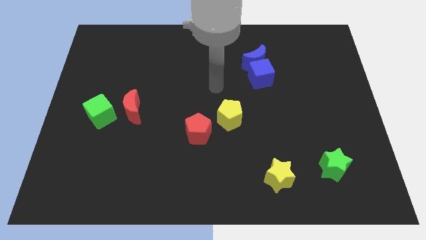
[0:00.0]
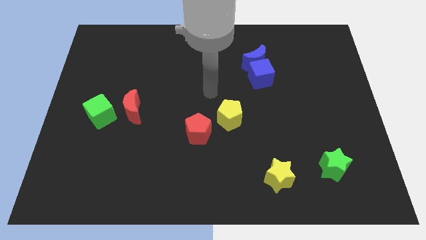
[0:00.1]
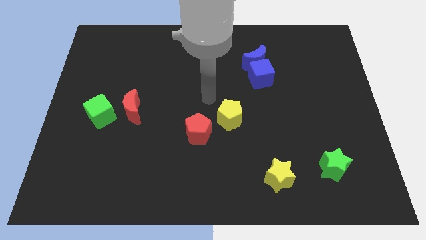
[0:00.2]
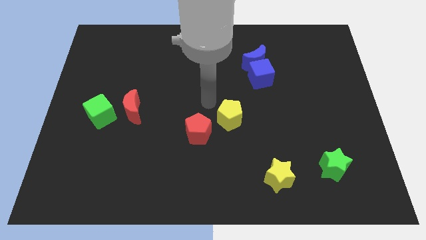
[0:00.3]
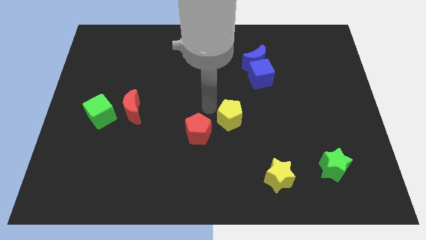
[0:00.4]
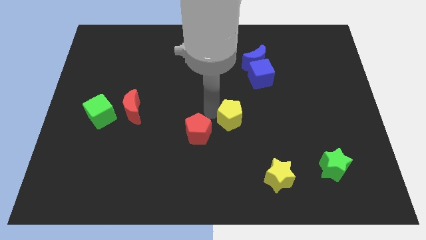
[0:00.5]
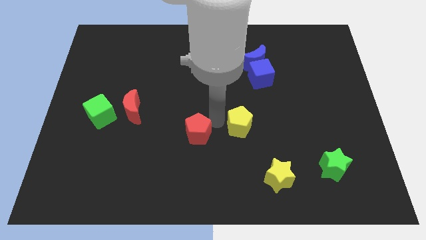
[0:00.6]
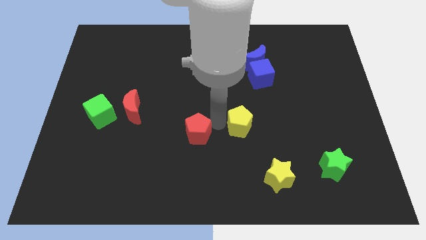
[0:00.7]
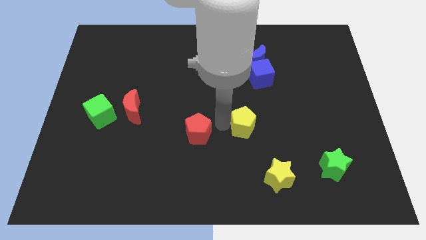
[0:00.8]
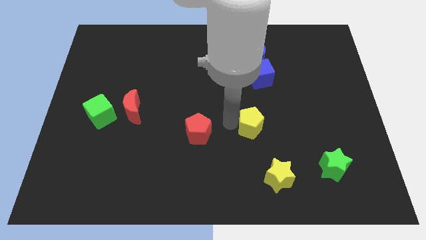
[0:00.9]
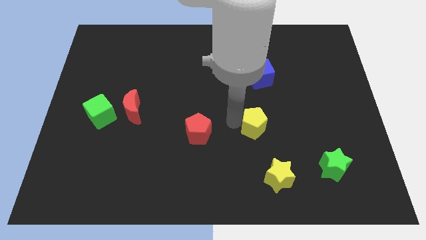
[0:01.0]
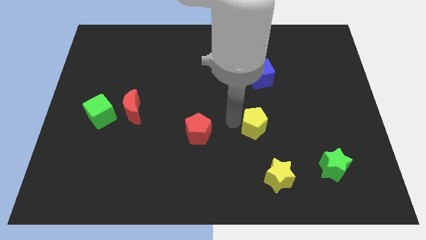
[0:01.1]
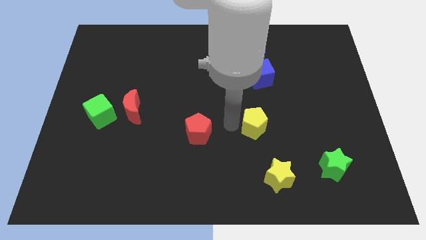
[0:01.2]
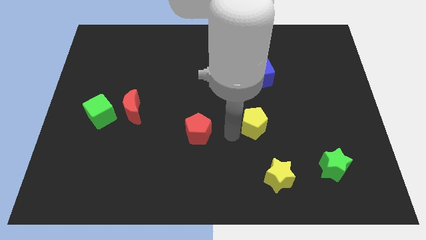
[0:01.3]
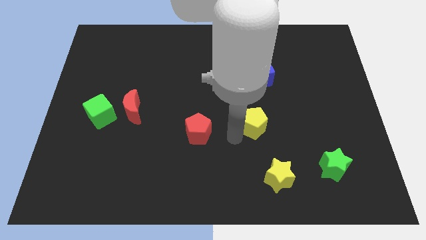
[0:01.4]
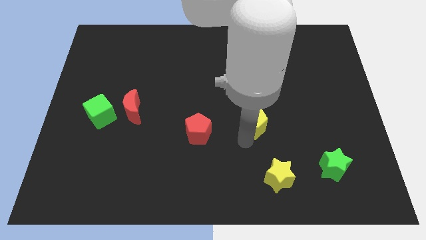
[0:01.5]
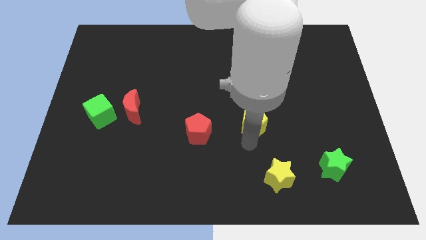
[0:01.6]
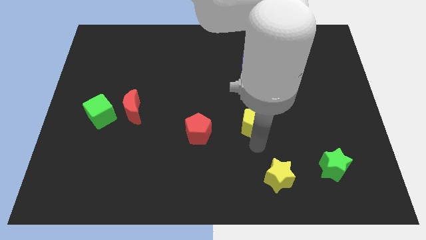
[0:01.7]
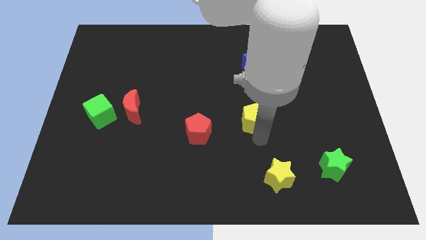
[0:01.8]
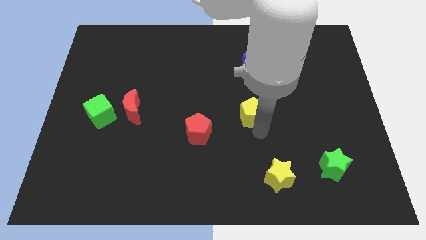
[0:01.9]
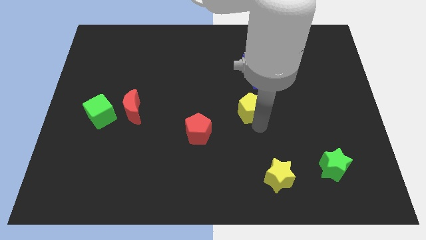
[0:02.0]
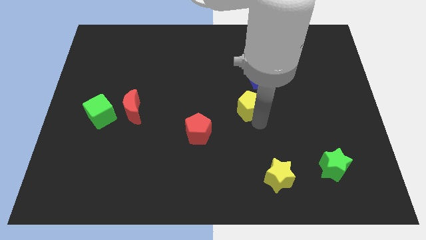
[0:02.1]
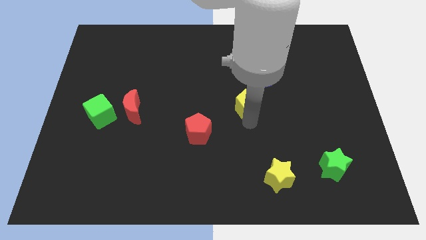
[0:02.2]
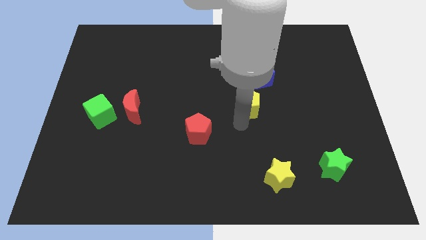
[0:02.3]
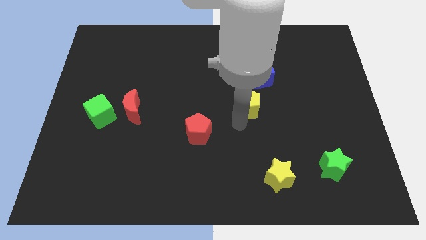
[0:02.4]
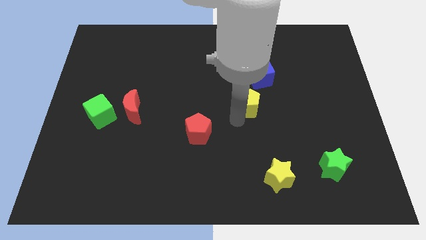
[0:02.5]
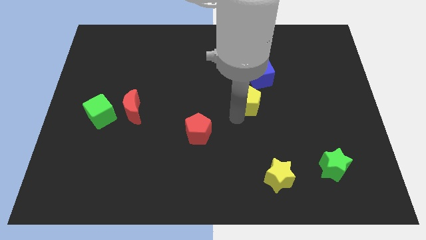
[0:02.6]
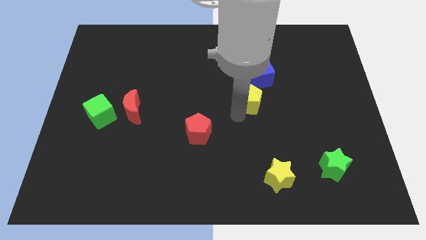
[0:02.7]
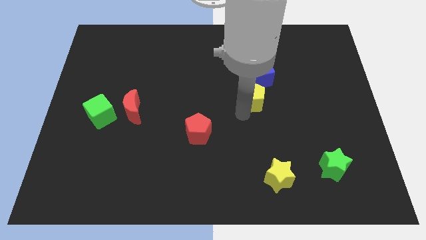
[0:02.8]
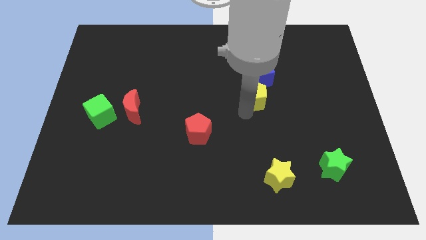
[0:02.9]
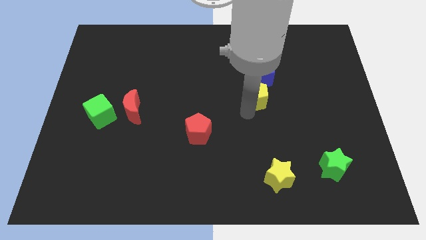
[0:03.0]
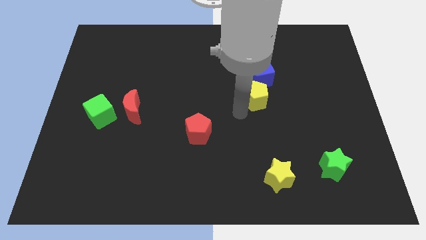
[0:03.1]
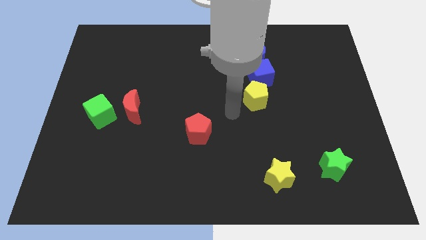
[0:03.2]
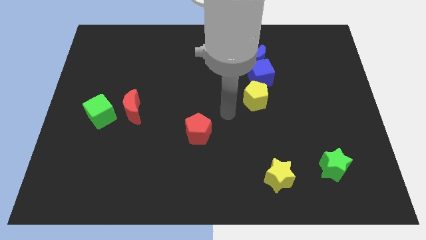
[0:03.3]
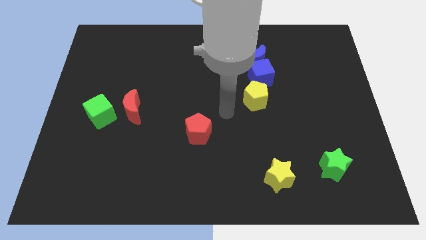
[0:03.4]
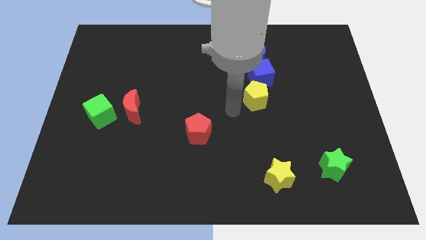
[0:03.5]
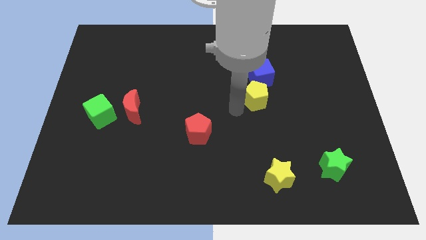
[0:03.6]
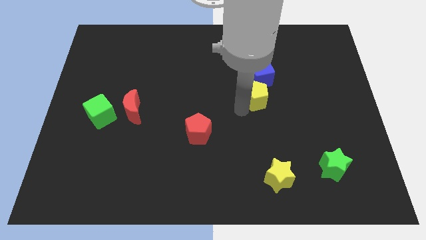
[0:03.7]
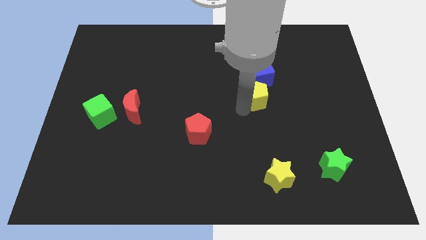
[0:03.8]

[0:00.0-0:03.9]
move the yellow pentagon to the bottom left side of the blue cube

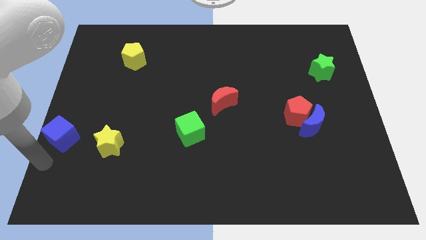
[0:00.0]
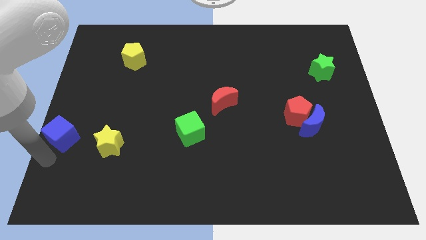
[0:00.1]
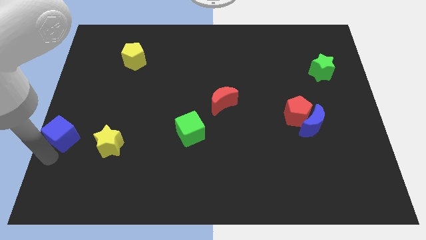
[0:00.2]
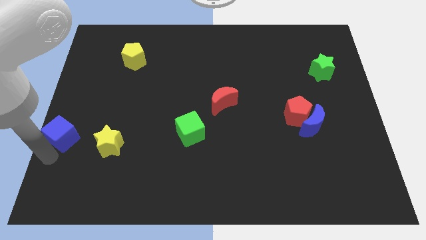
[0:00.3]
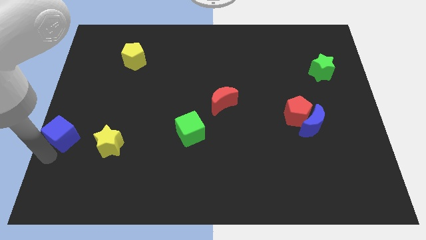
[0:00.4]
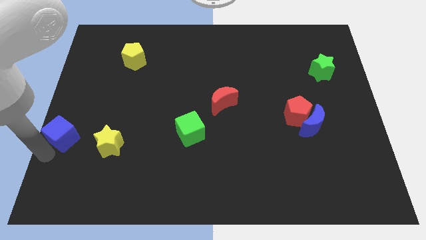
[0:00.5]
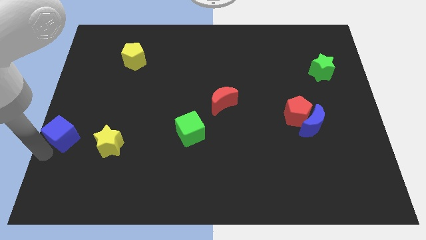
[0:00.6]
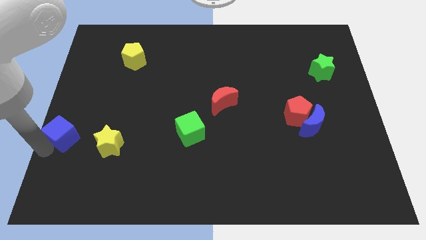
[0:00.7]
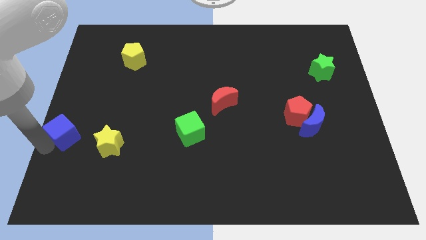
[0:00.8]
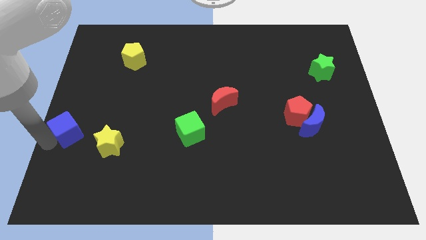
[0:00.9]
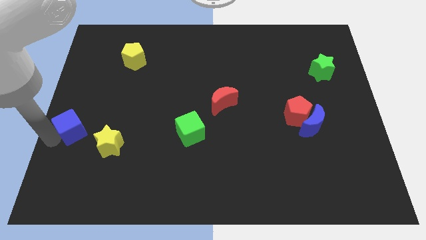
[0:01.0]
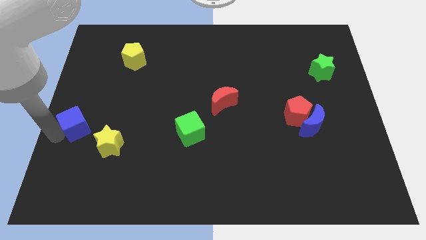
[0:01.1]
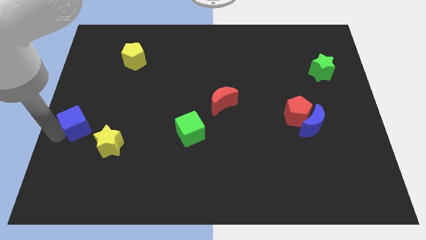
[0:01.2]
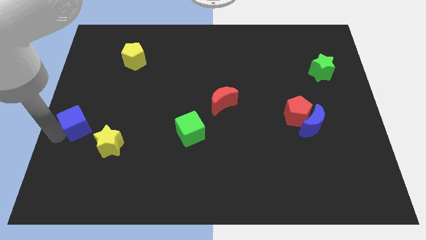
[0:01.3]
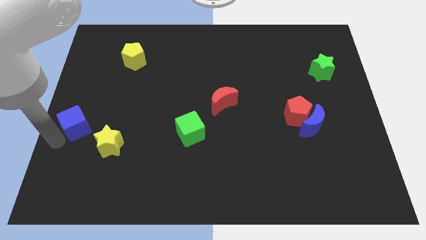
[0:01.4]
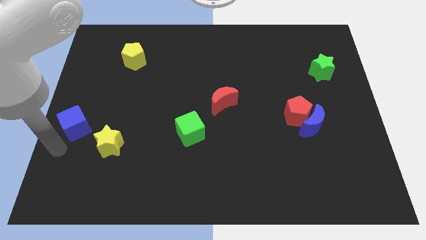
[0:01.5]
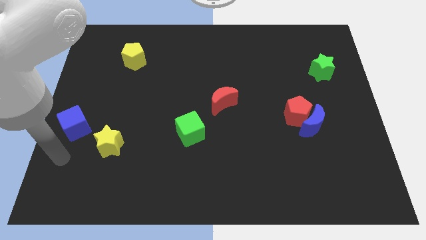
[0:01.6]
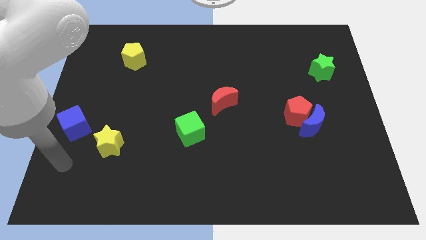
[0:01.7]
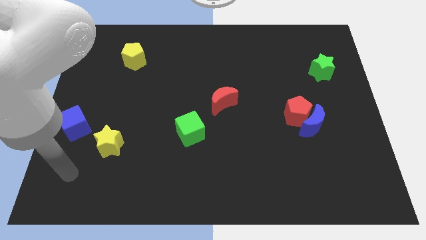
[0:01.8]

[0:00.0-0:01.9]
move the blue cube slightly up

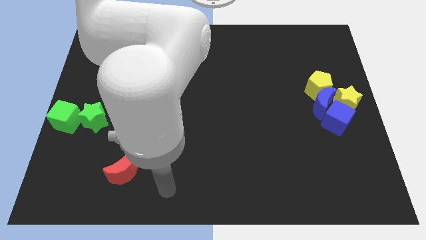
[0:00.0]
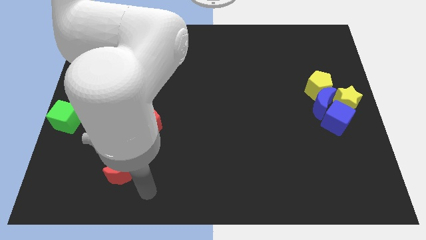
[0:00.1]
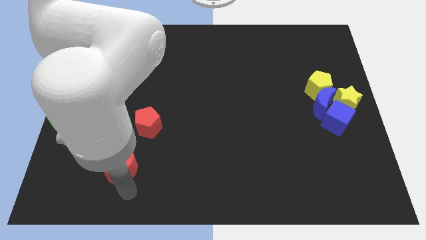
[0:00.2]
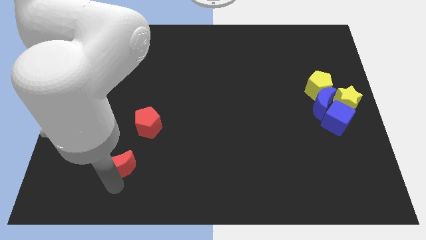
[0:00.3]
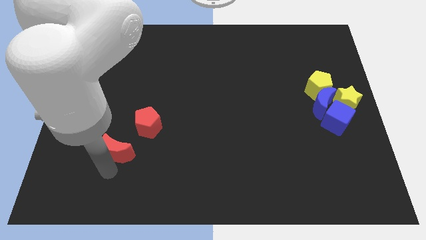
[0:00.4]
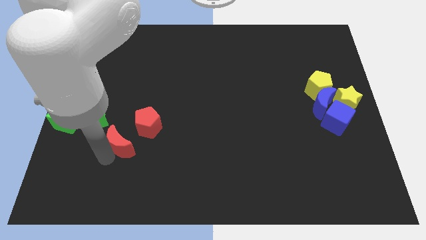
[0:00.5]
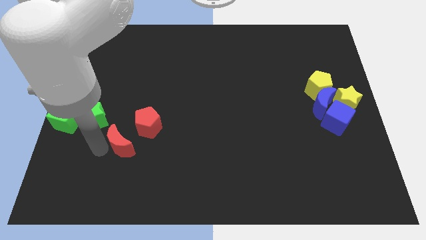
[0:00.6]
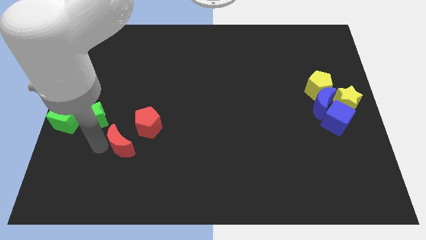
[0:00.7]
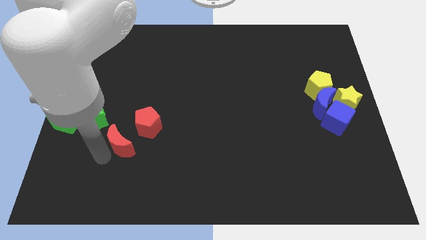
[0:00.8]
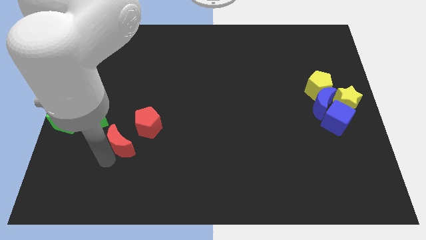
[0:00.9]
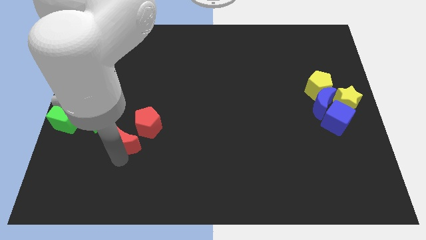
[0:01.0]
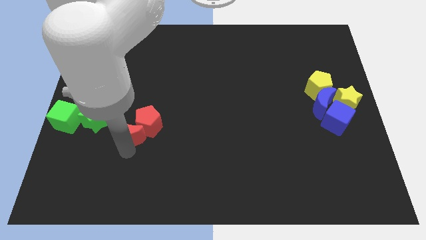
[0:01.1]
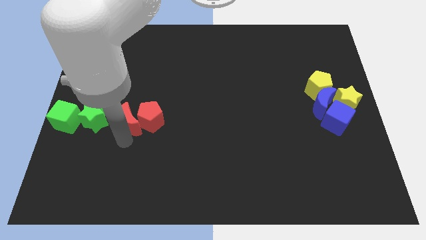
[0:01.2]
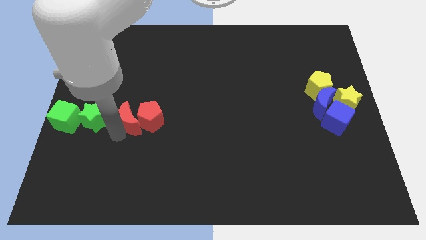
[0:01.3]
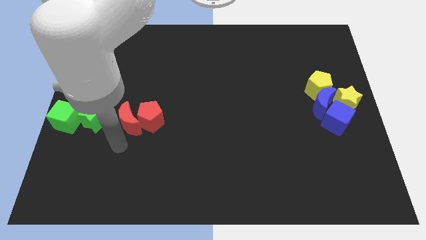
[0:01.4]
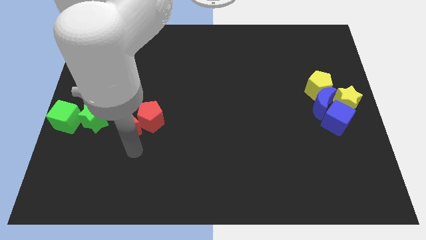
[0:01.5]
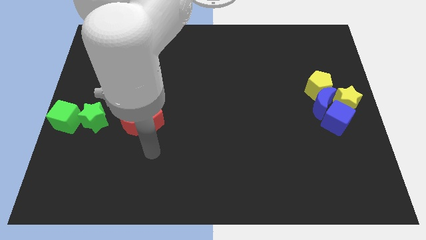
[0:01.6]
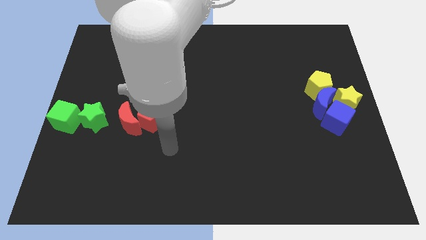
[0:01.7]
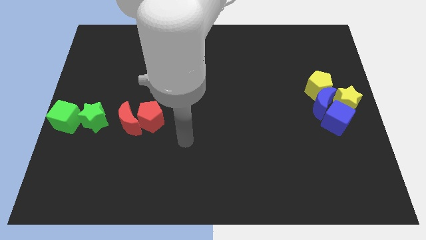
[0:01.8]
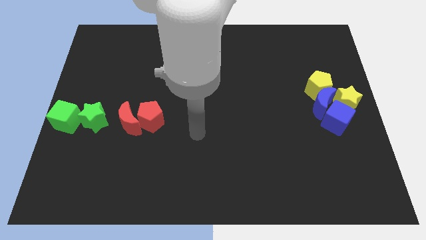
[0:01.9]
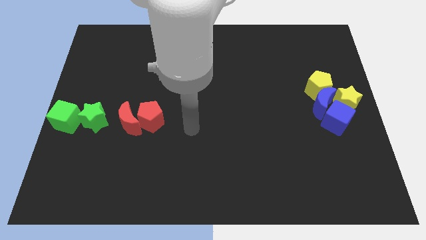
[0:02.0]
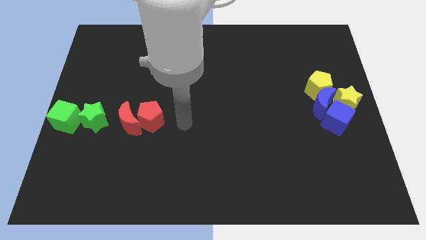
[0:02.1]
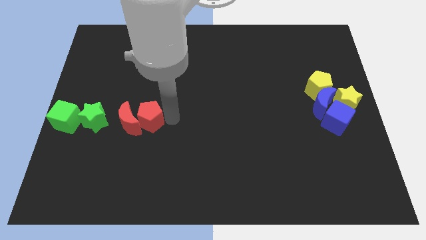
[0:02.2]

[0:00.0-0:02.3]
move the red crescent to the left side of the red pentagon

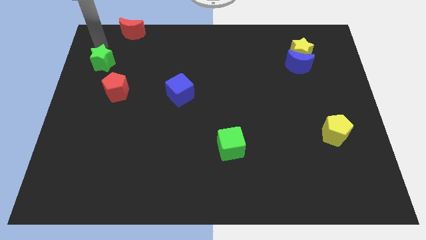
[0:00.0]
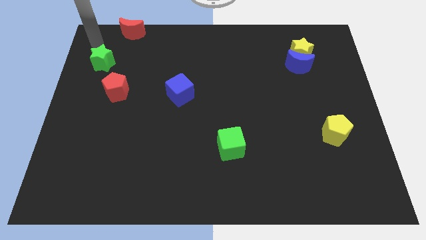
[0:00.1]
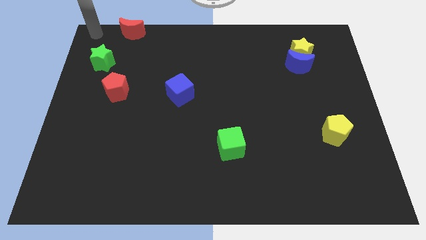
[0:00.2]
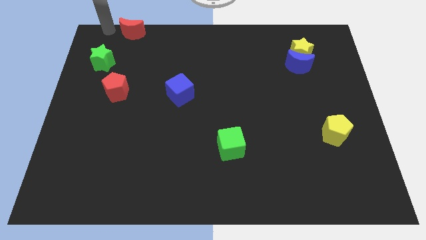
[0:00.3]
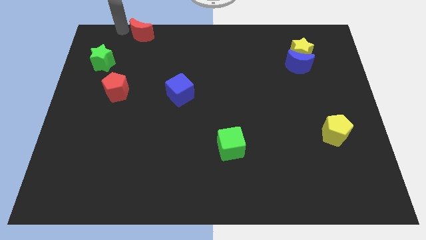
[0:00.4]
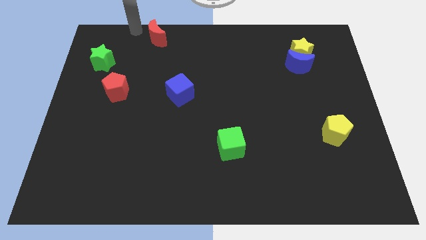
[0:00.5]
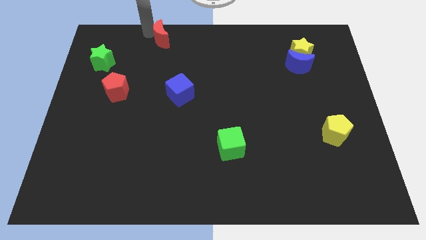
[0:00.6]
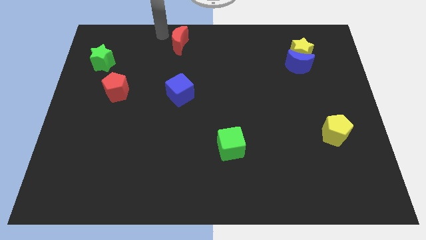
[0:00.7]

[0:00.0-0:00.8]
place the red crescent vertical to the blue cube

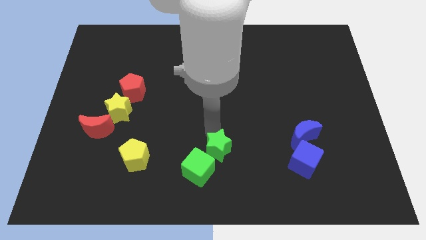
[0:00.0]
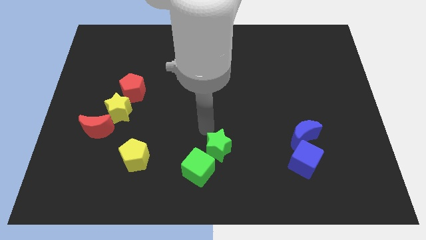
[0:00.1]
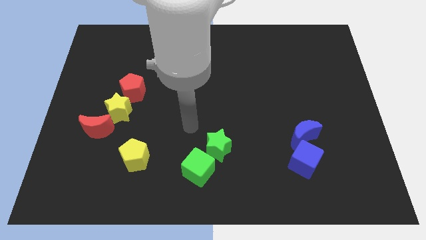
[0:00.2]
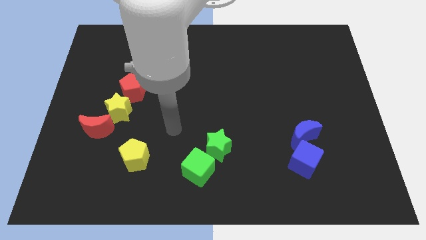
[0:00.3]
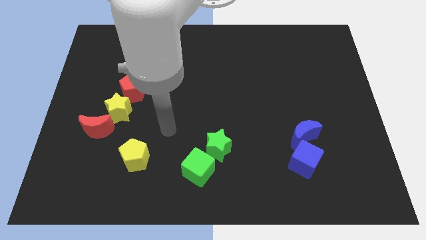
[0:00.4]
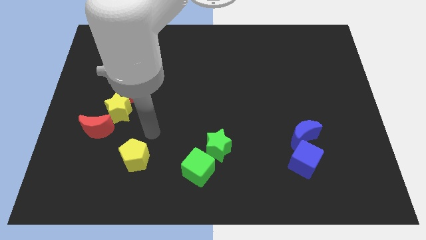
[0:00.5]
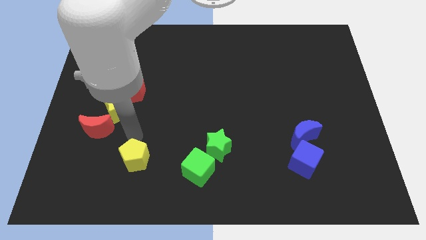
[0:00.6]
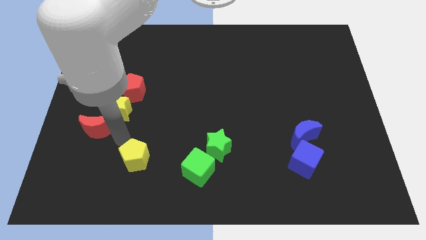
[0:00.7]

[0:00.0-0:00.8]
place your arm to the top of the yellow pentagon
